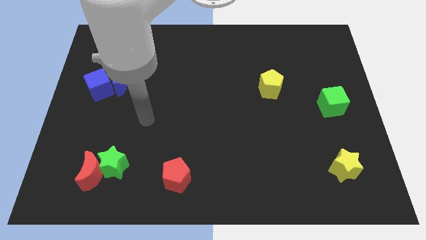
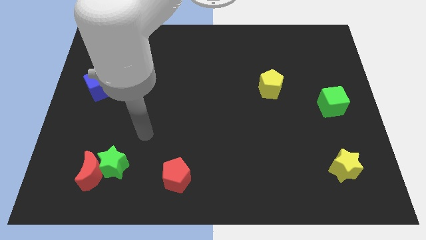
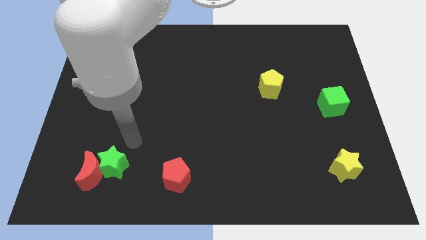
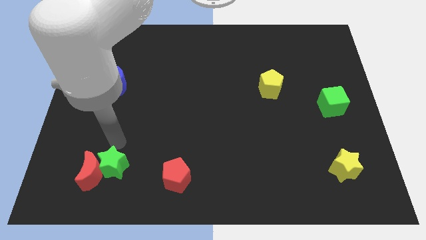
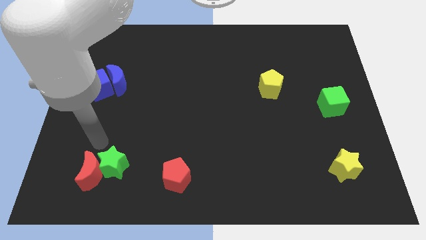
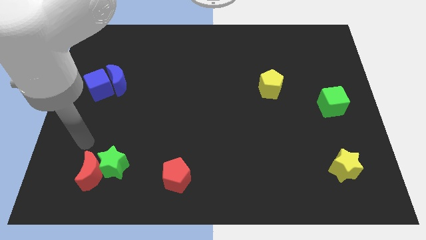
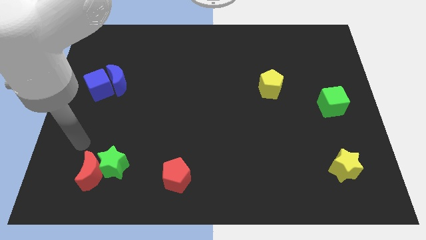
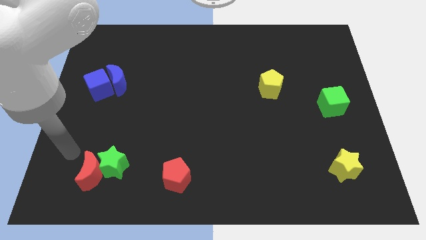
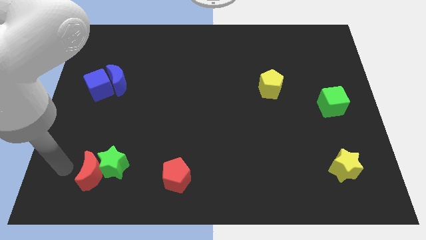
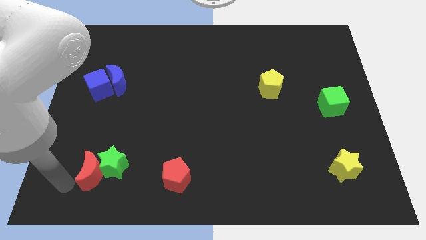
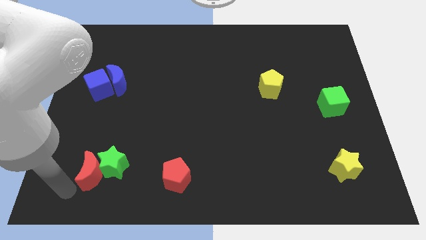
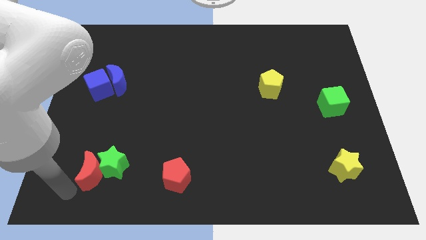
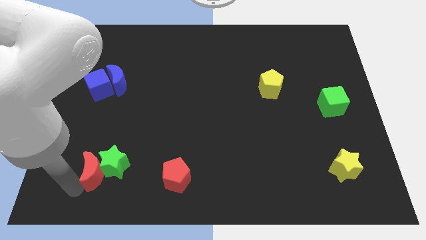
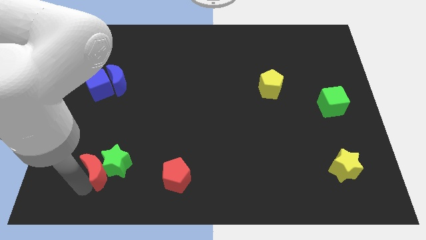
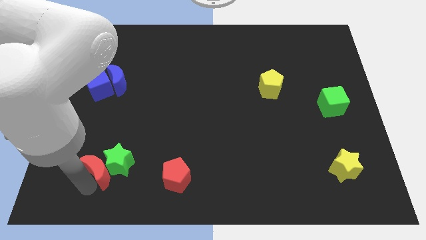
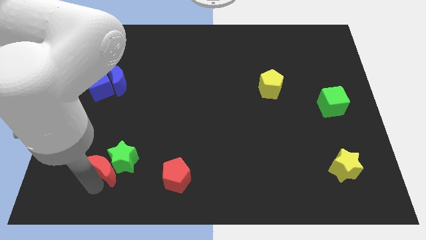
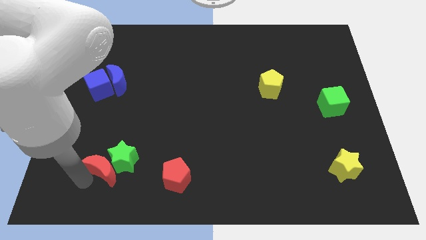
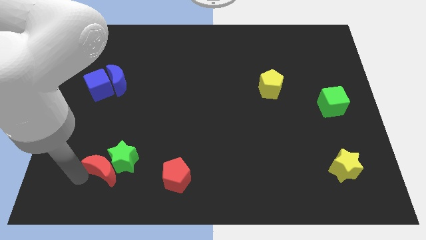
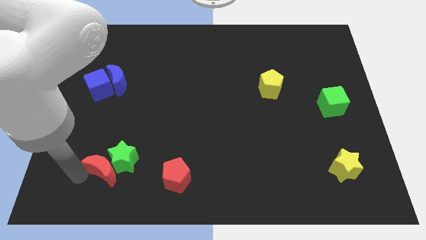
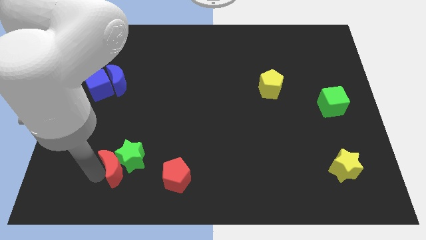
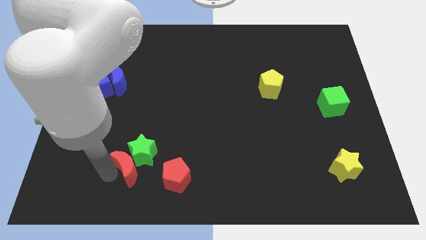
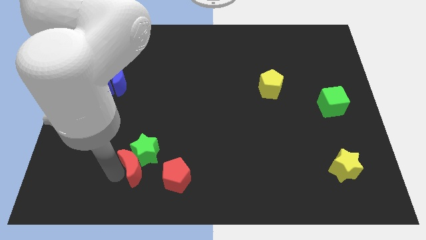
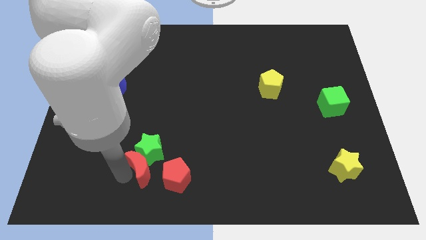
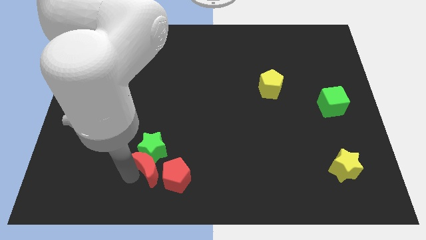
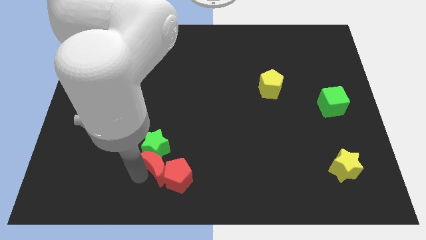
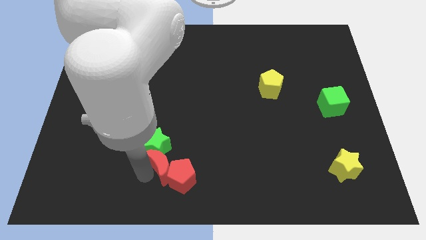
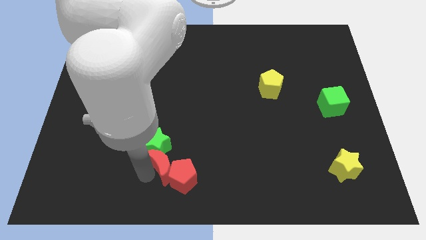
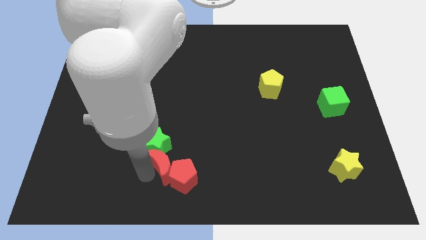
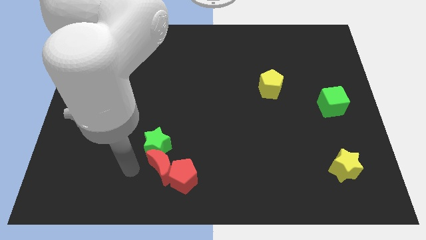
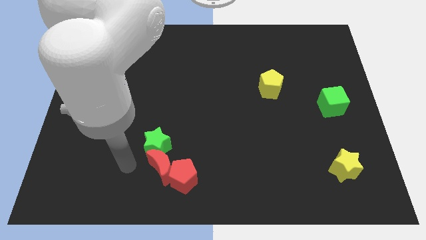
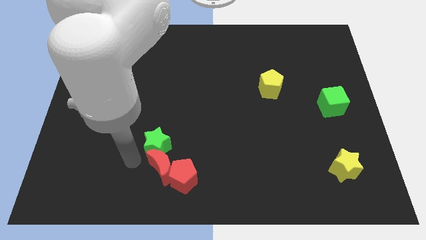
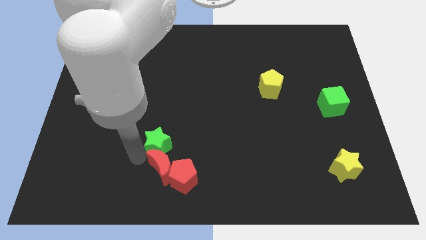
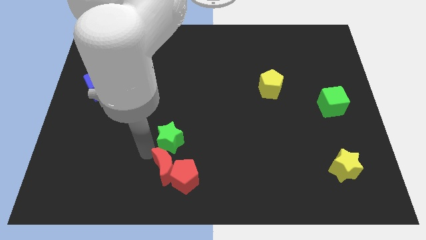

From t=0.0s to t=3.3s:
make the red crescent to touch the left side of the red pentagon

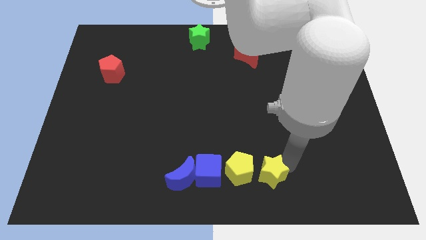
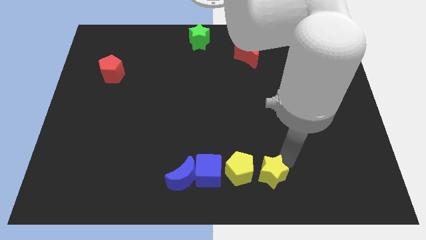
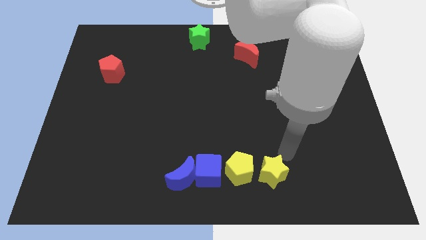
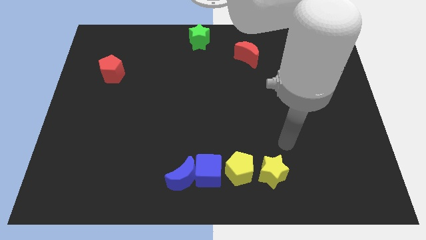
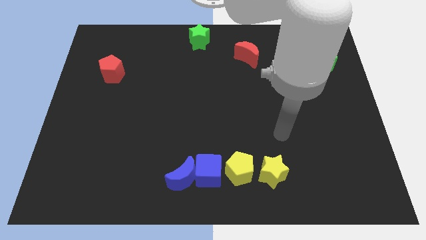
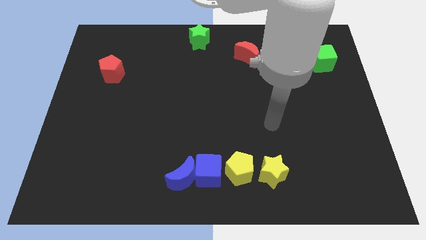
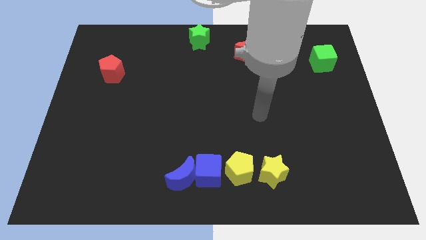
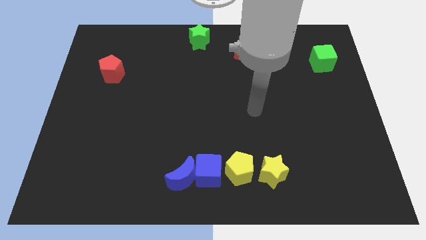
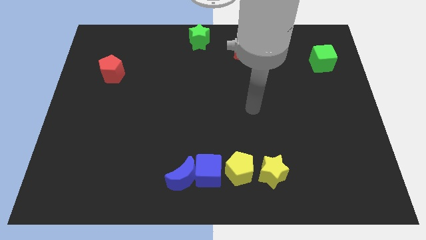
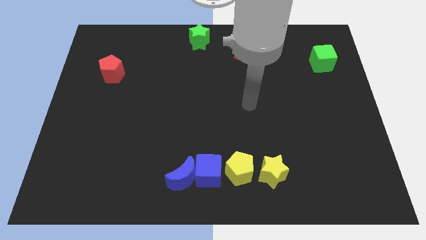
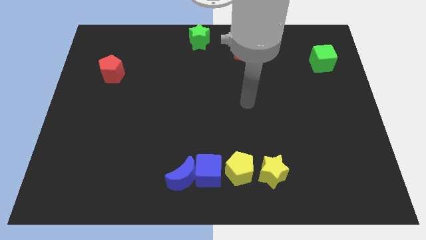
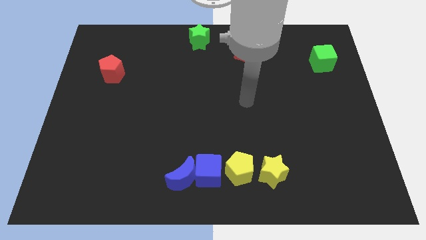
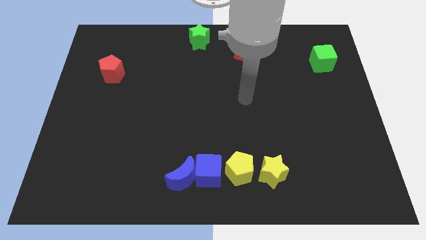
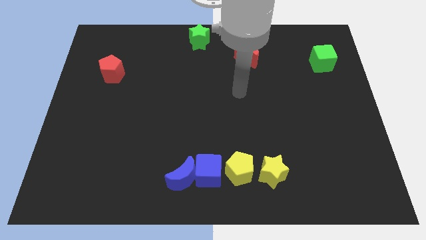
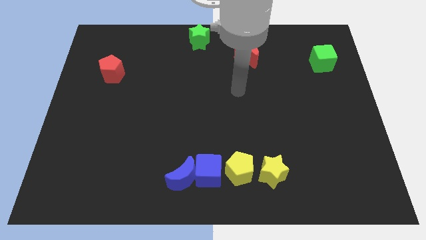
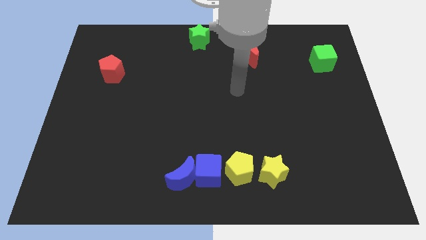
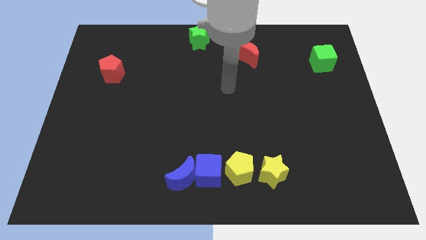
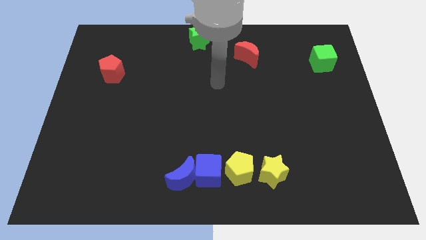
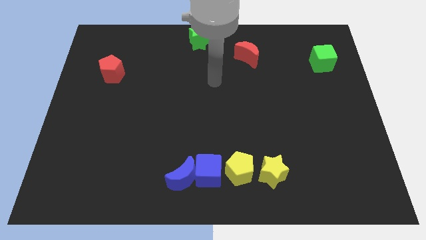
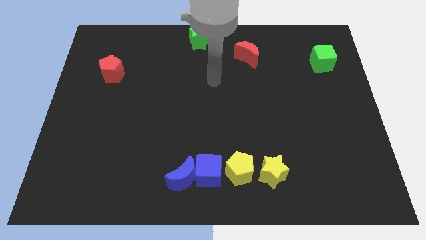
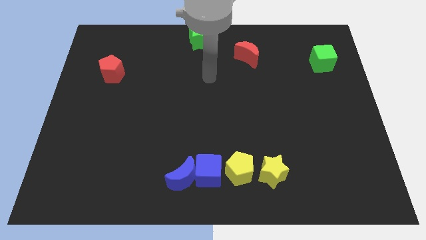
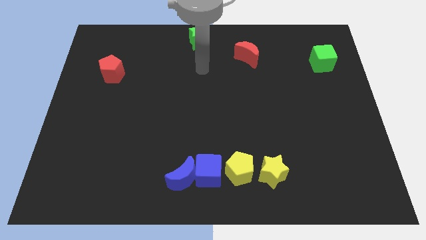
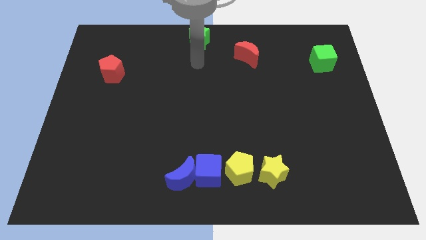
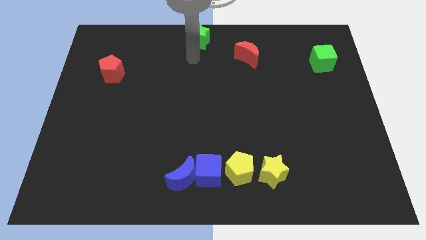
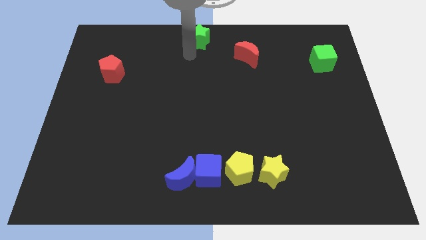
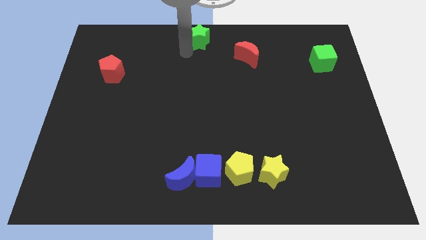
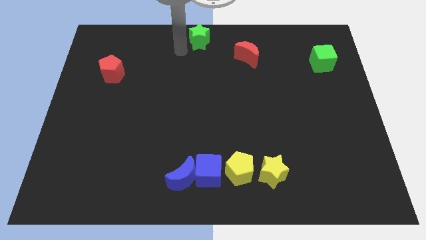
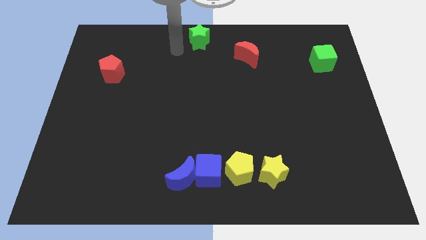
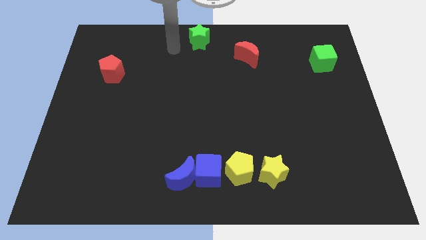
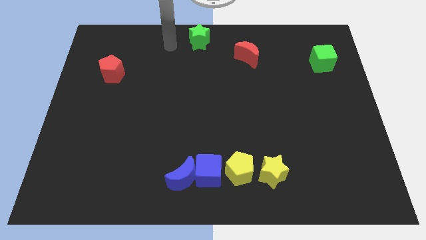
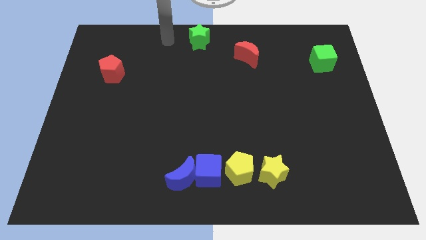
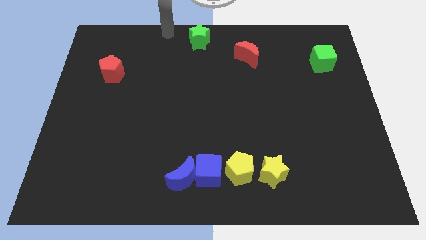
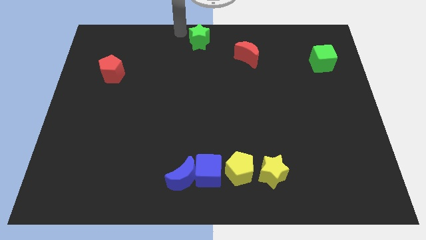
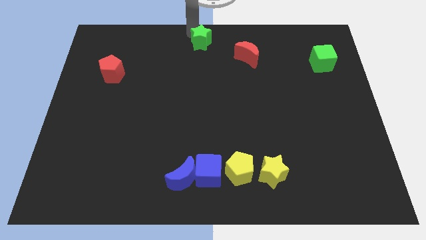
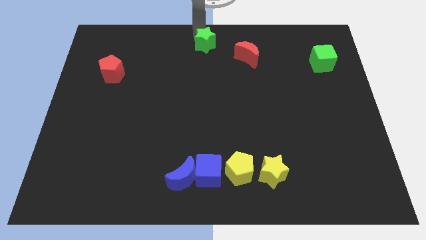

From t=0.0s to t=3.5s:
move your arm to the top of the green star

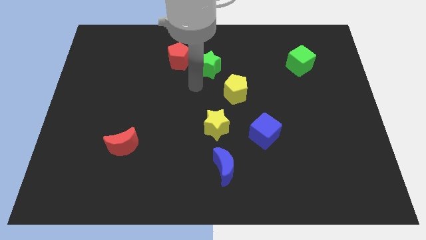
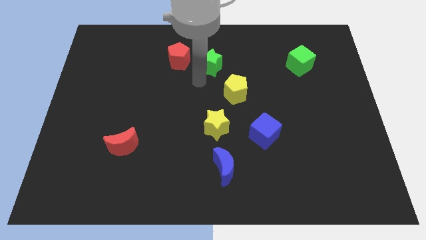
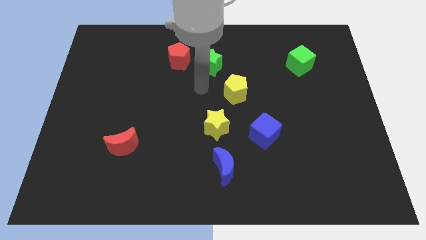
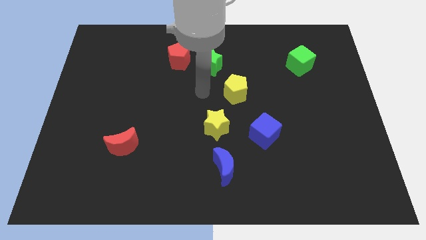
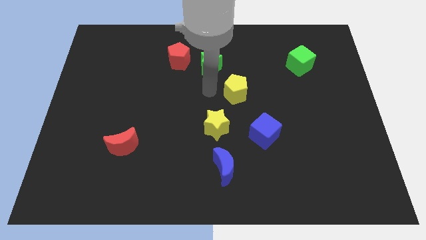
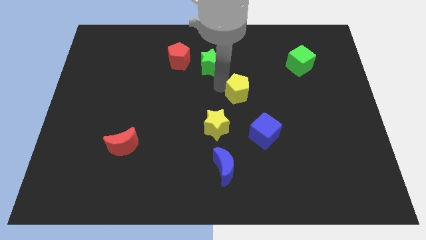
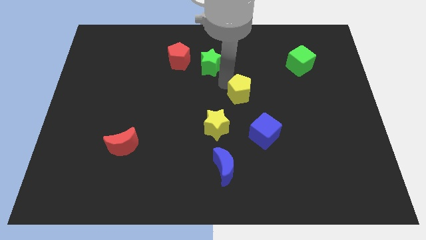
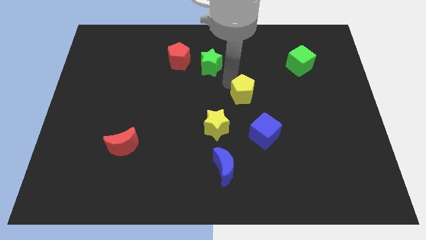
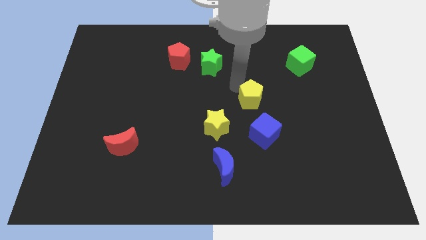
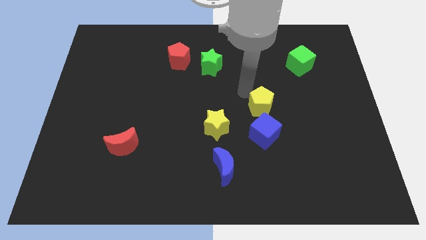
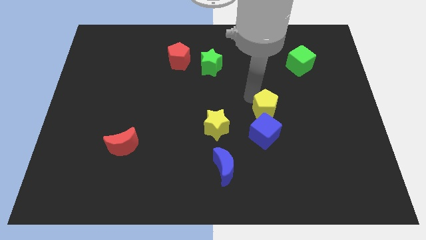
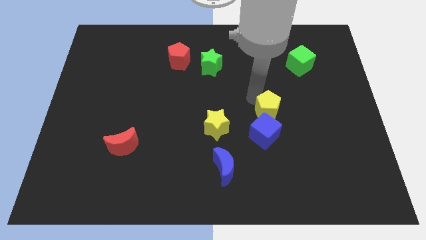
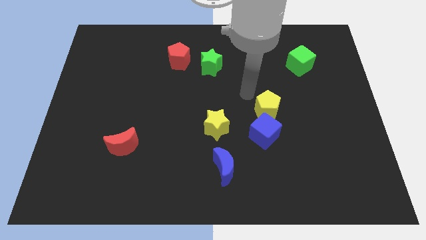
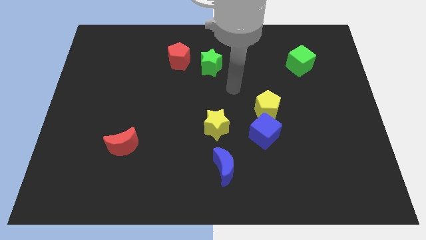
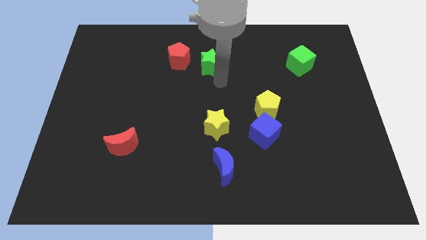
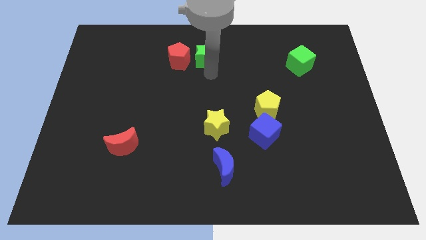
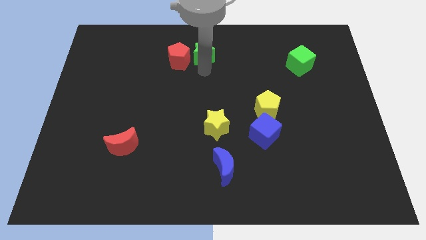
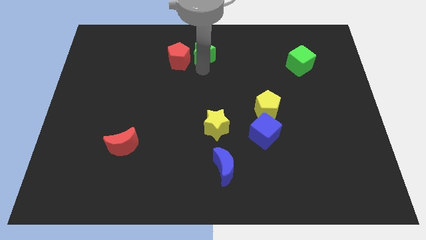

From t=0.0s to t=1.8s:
place the green star to the right of red pentagon

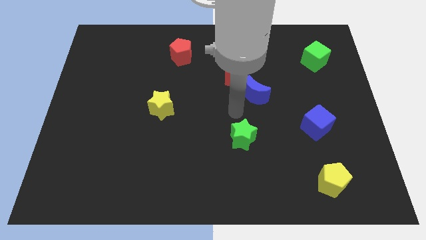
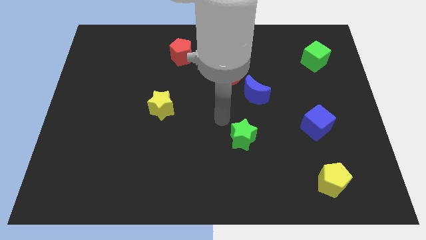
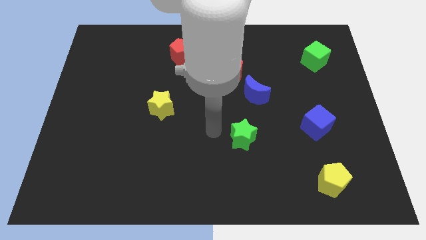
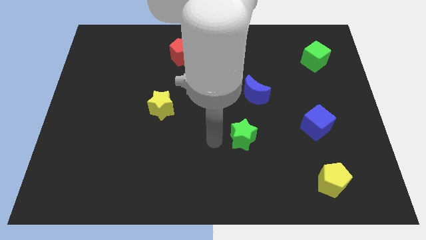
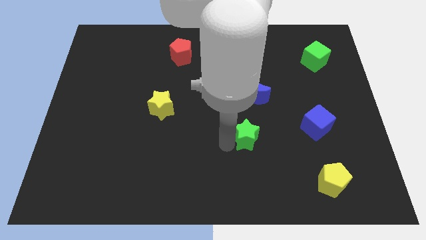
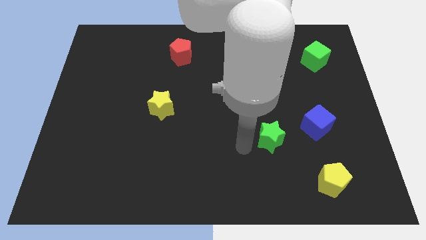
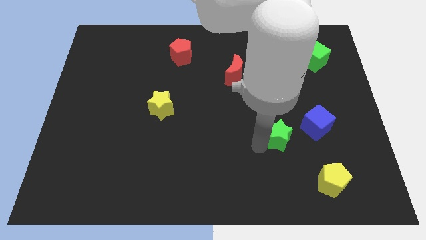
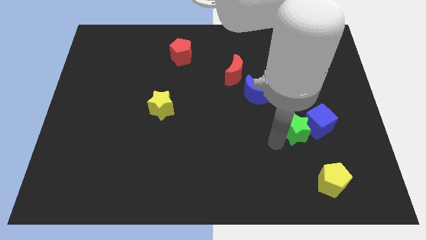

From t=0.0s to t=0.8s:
place green star to the left of blue cube
